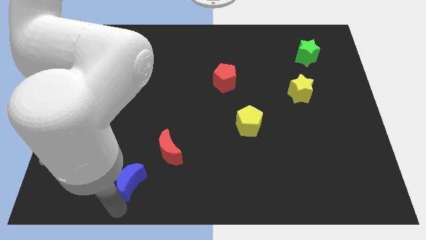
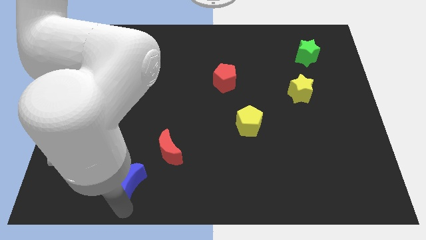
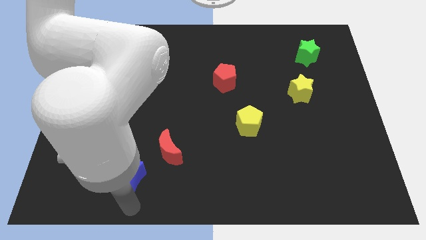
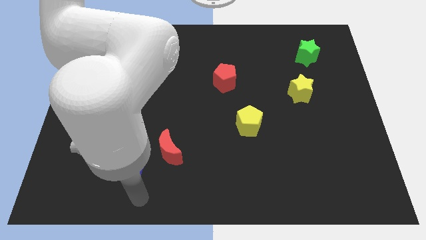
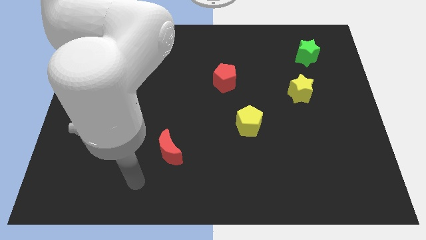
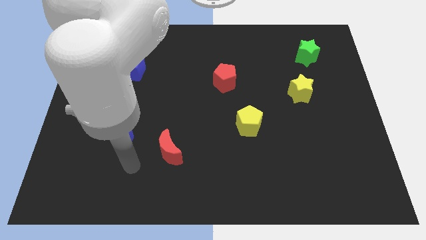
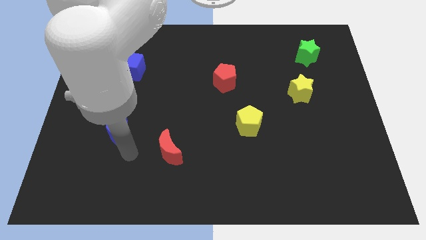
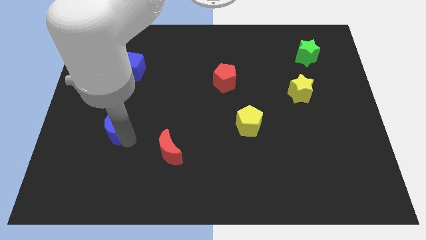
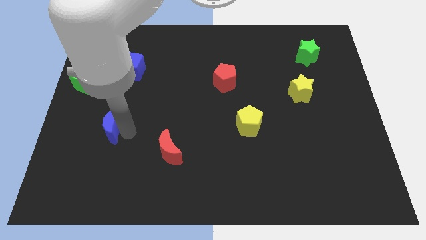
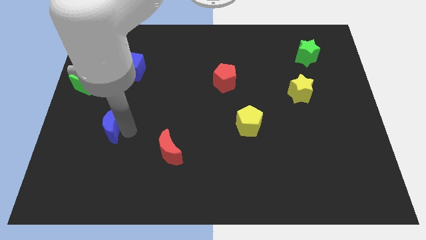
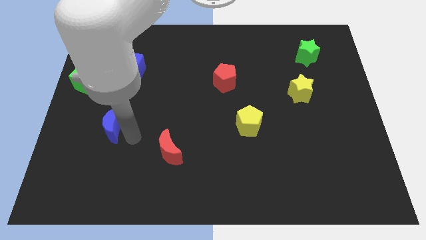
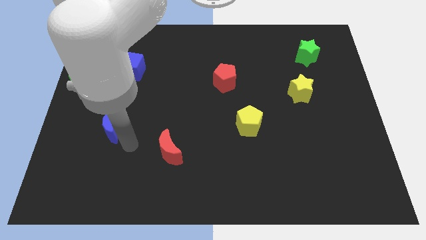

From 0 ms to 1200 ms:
push the blue crescent to the top of the board

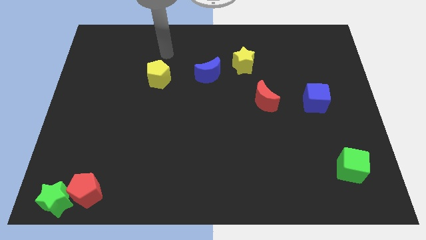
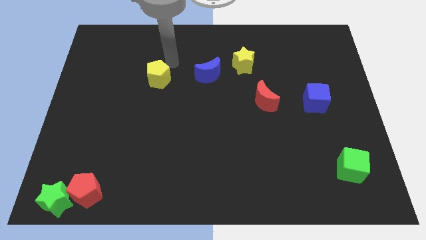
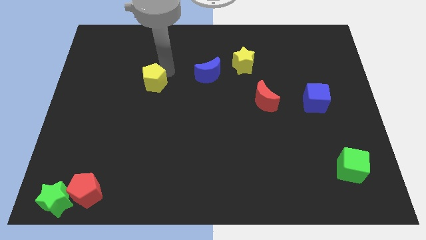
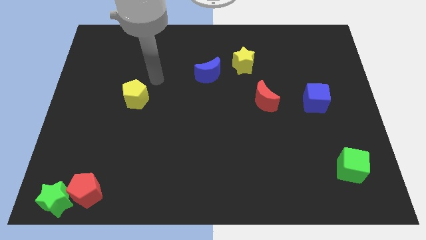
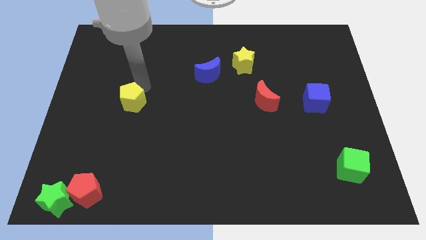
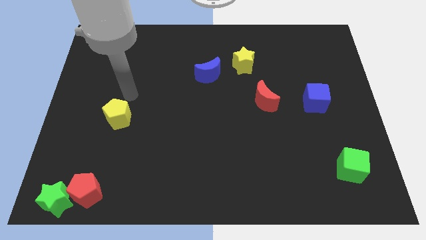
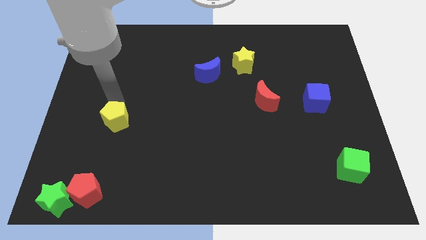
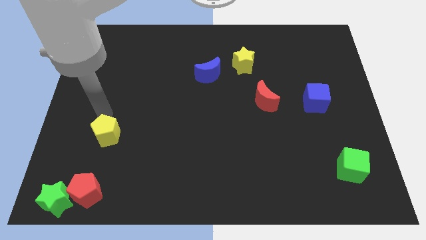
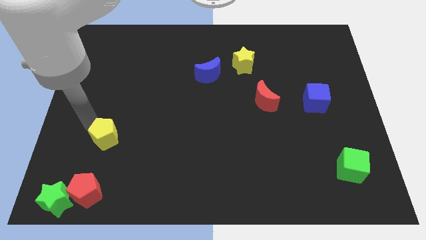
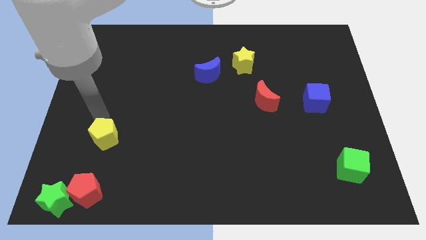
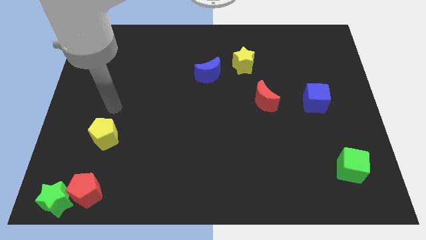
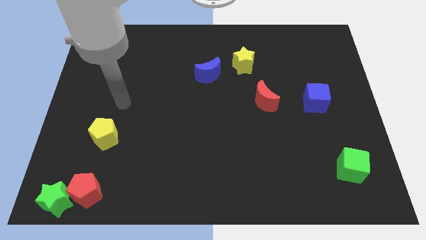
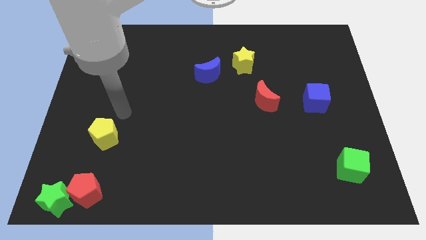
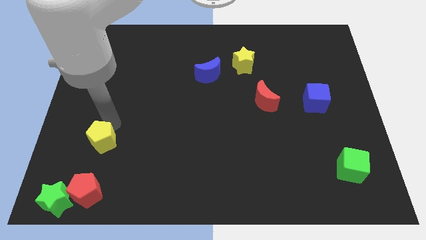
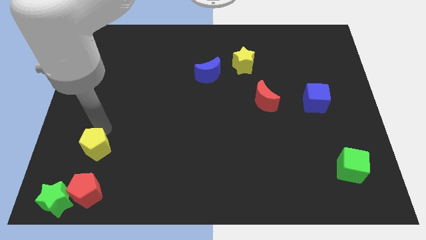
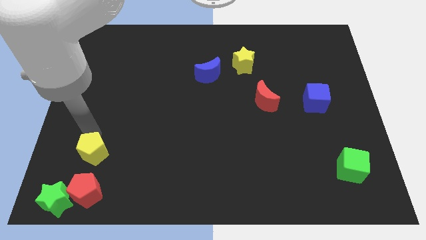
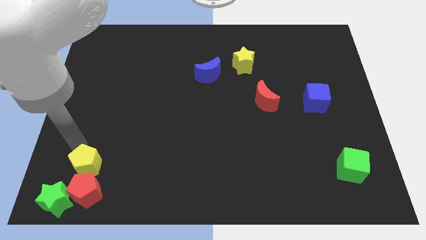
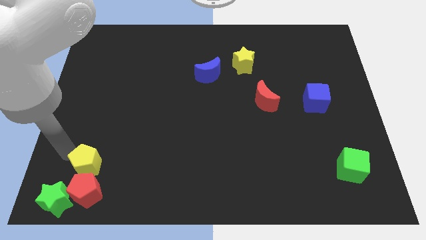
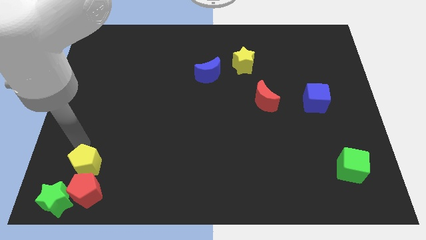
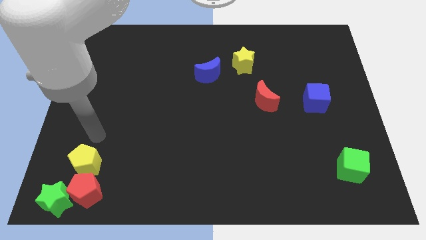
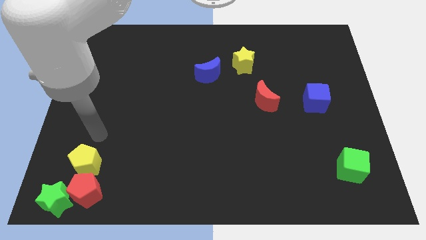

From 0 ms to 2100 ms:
move the yellow pentagon above to the red pentagon

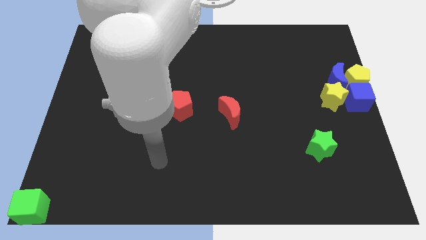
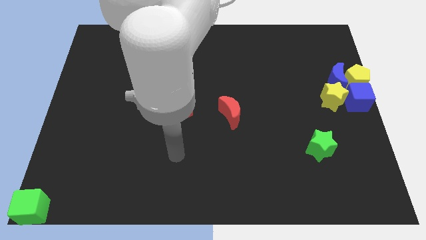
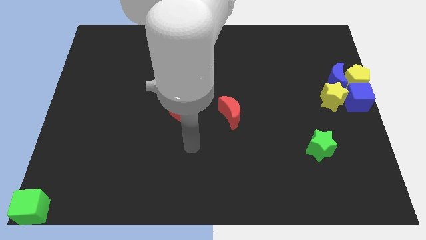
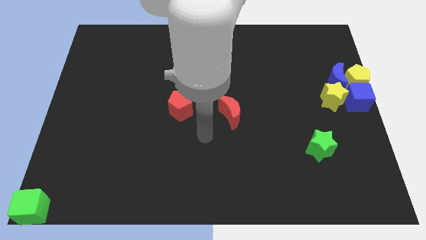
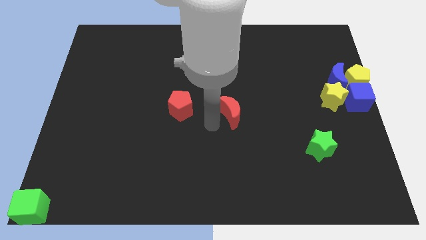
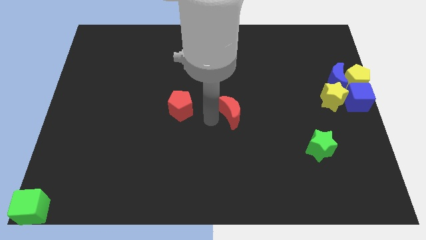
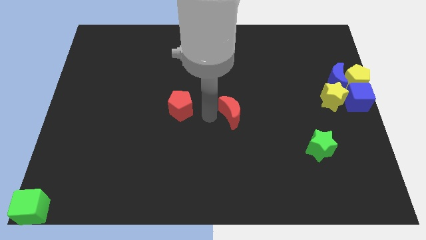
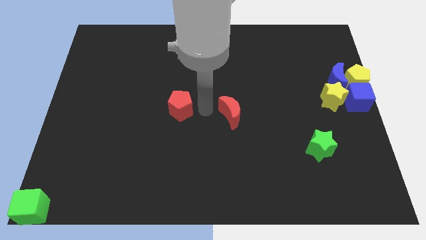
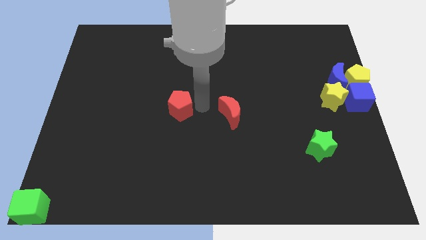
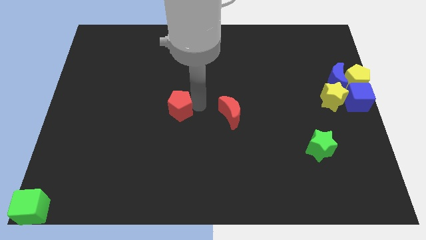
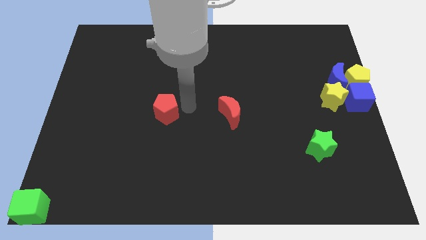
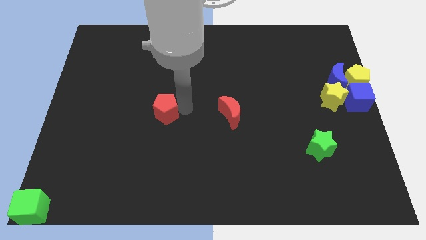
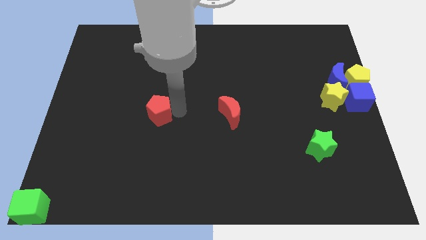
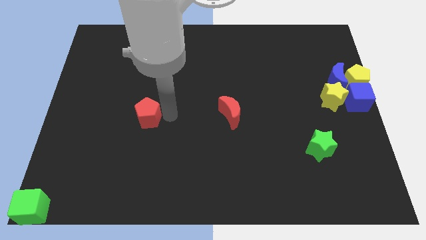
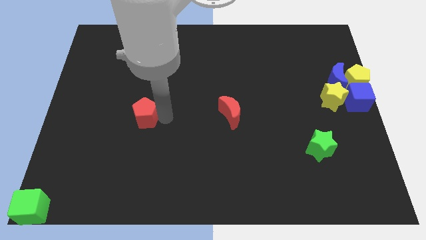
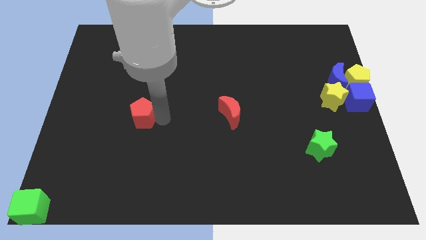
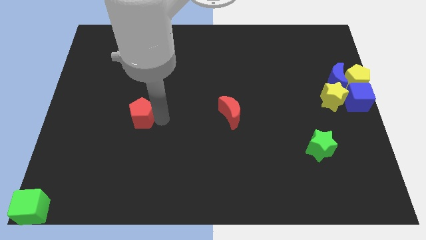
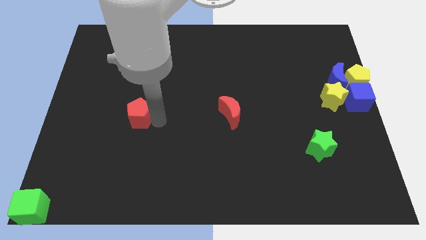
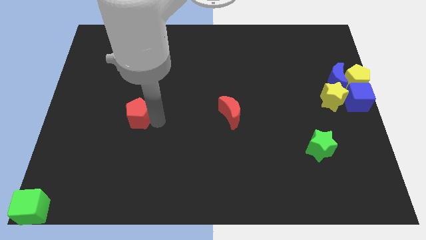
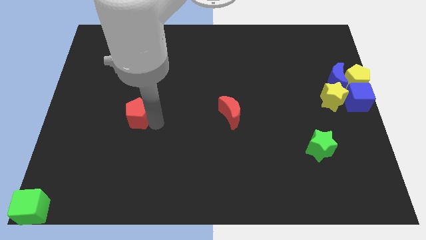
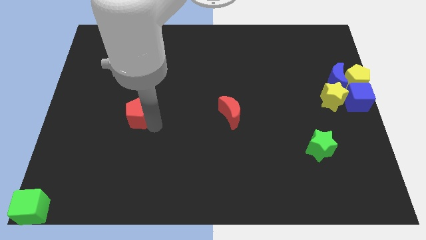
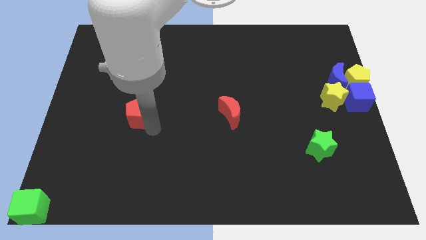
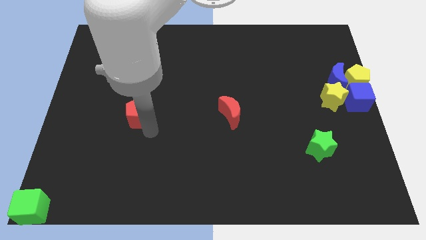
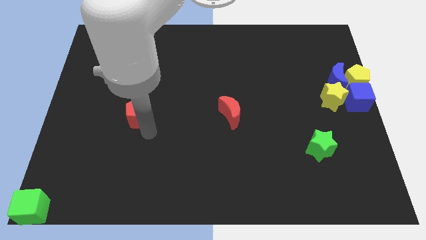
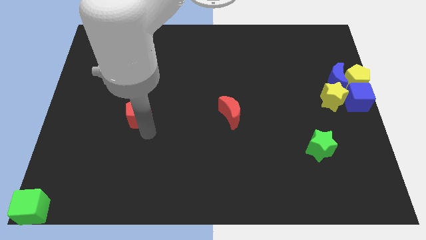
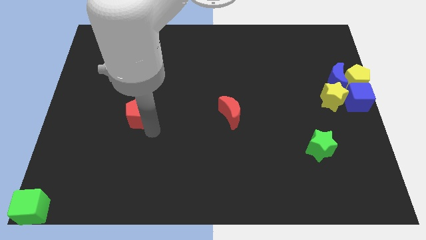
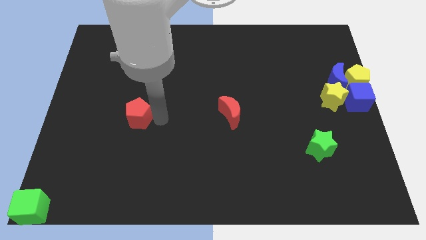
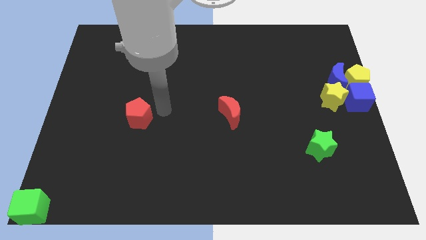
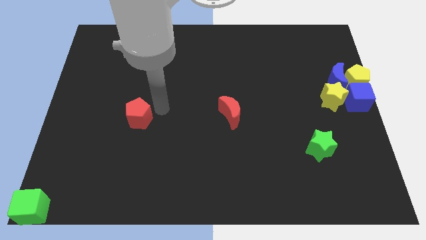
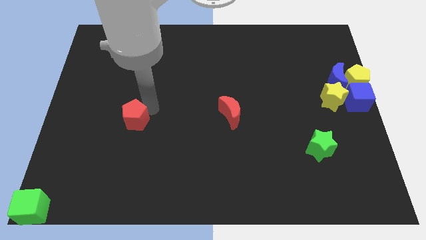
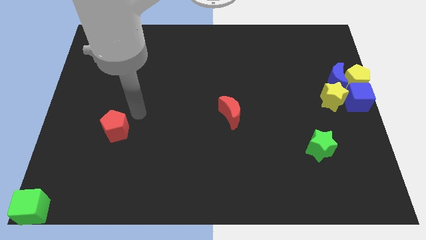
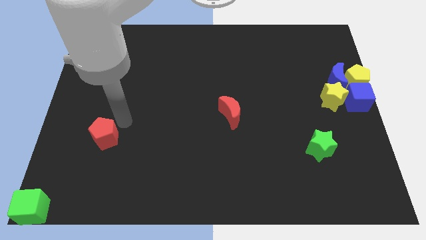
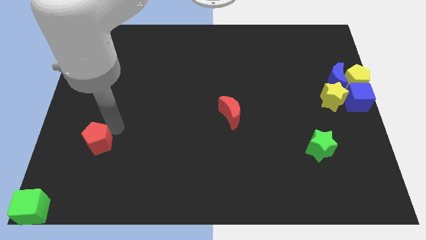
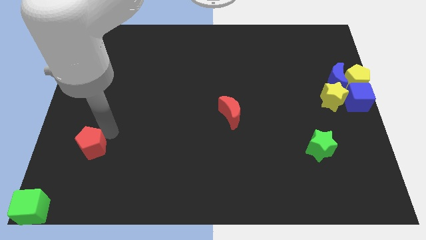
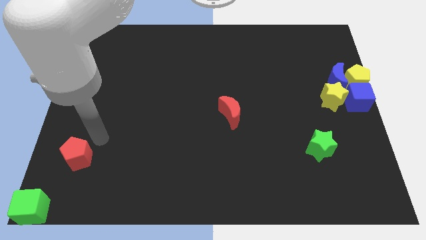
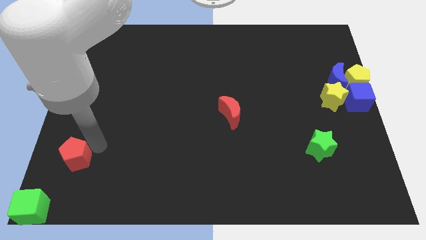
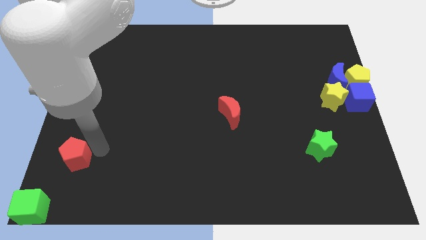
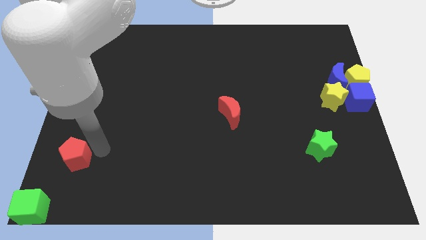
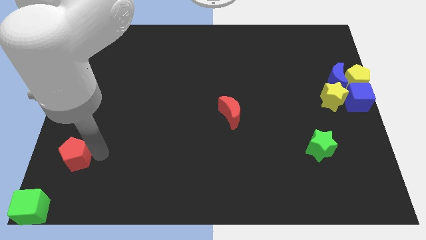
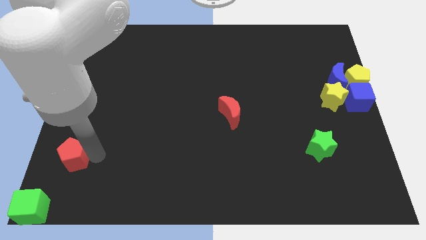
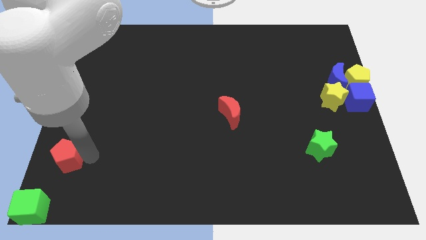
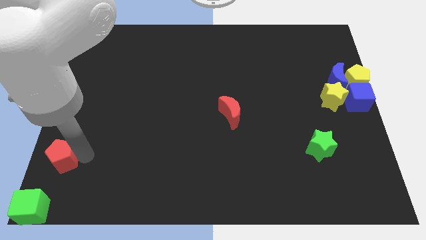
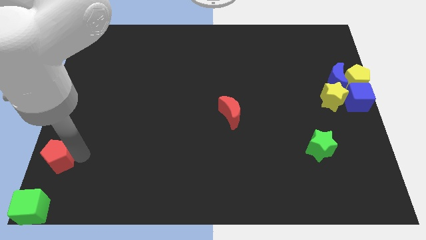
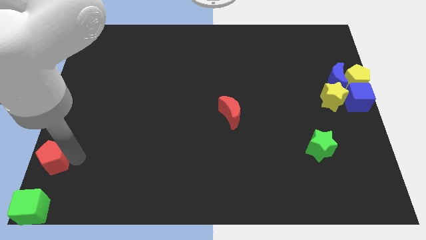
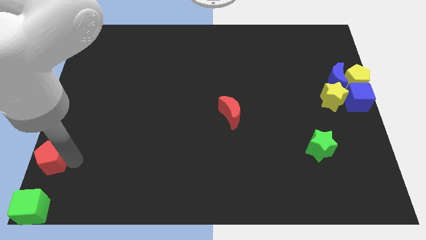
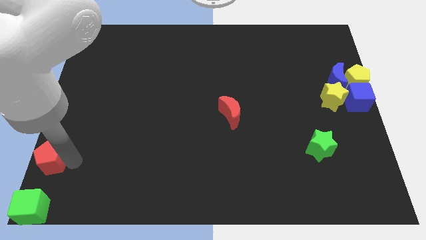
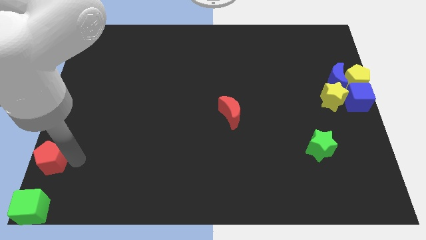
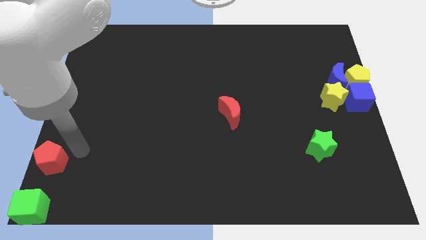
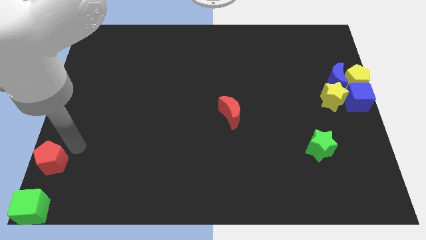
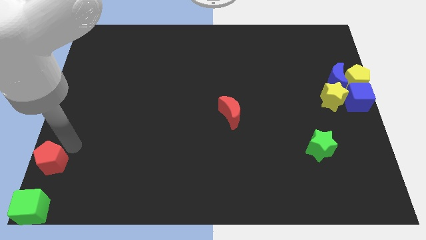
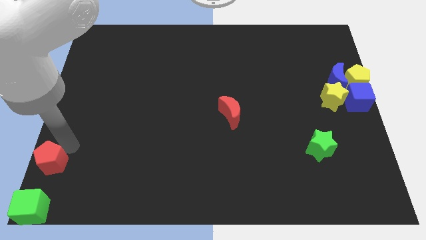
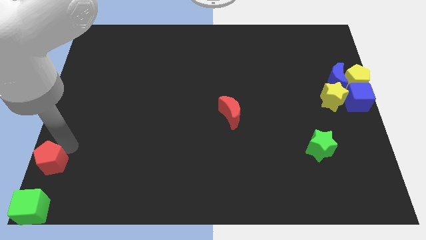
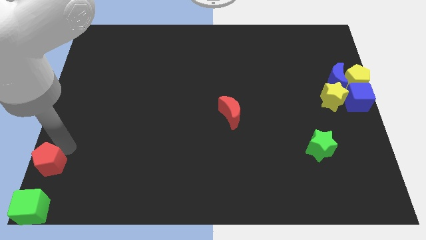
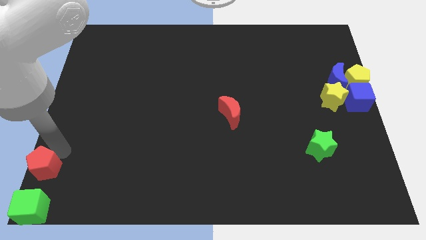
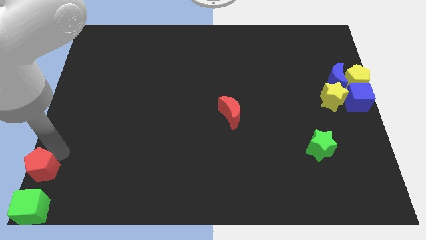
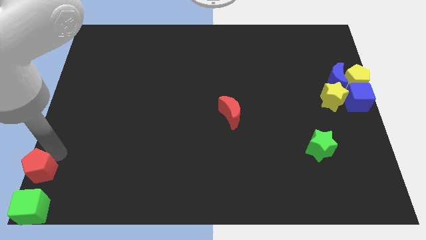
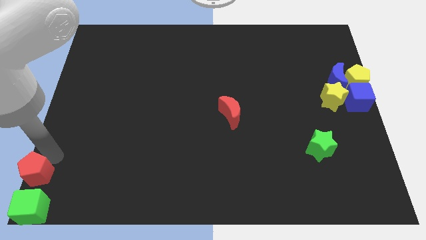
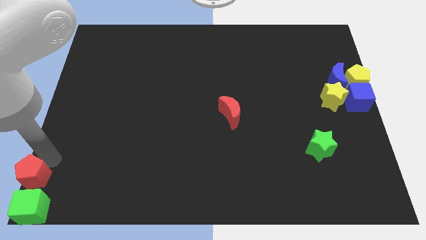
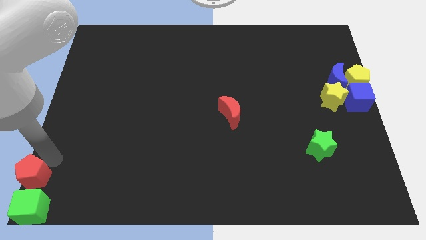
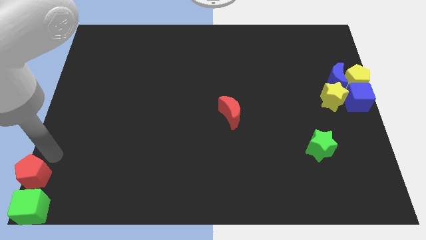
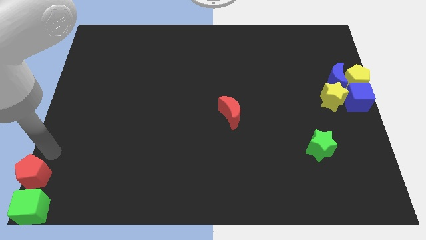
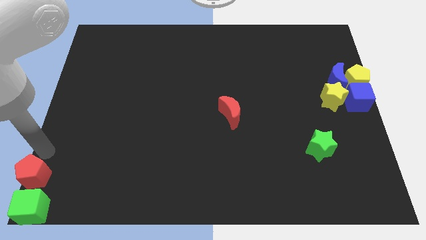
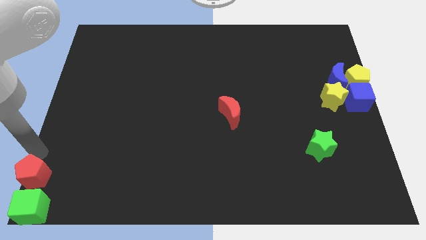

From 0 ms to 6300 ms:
place the red pentagon above green cube
